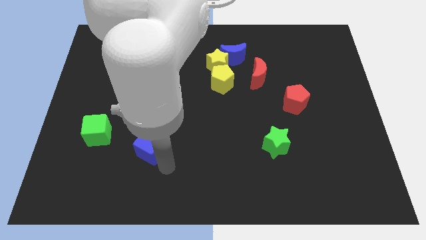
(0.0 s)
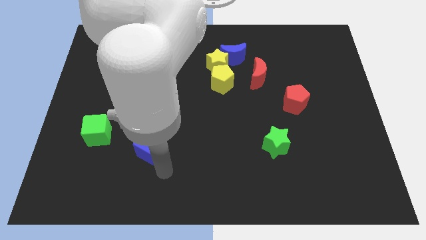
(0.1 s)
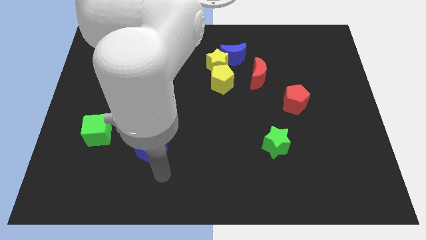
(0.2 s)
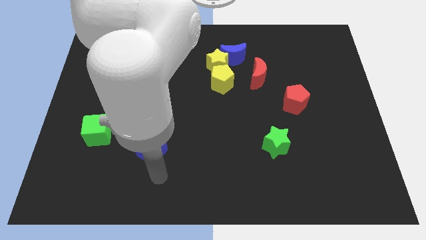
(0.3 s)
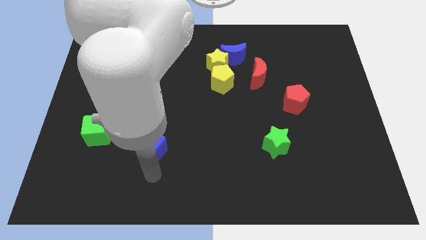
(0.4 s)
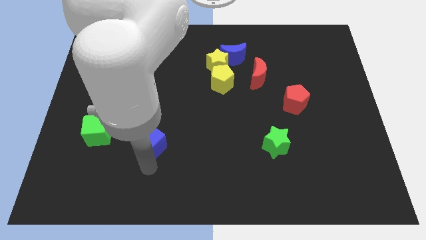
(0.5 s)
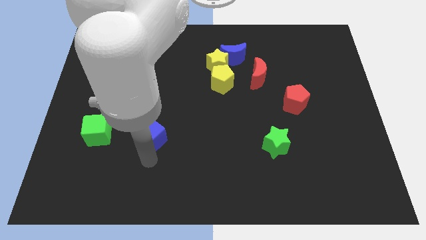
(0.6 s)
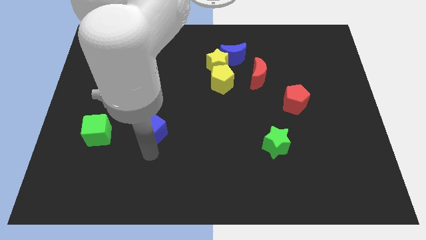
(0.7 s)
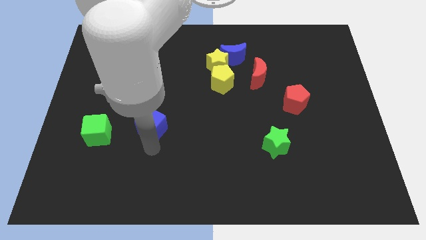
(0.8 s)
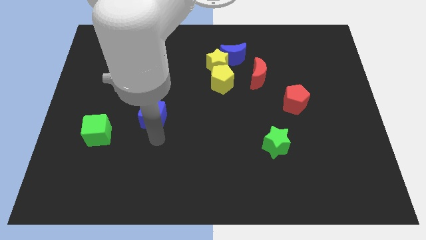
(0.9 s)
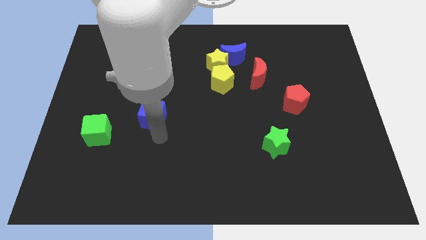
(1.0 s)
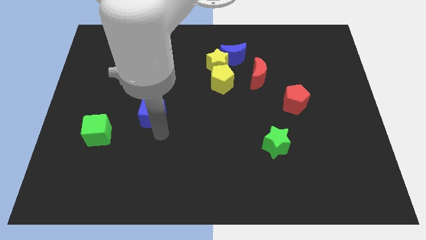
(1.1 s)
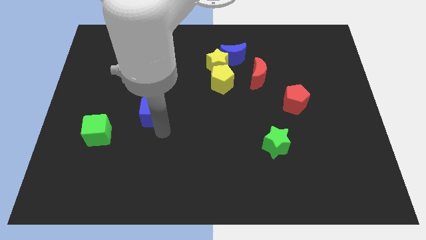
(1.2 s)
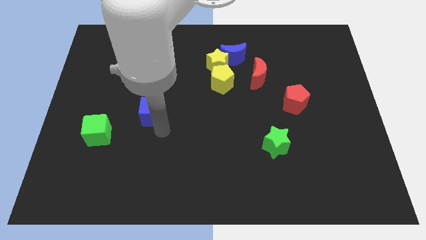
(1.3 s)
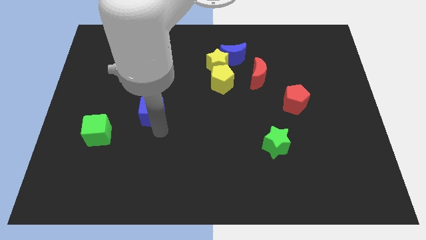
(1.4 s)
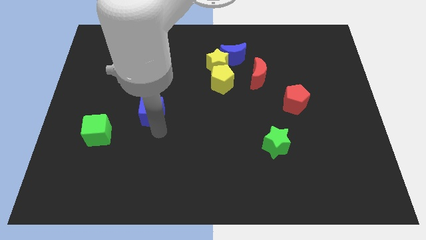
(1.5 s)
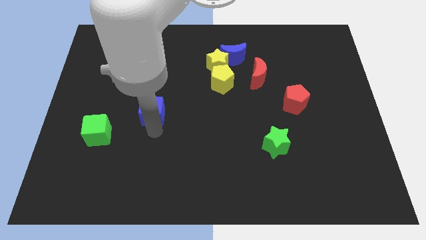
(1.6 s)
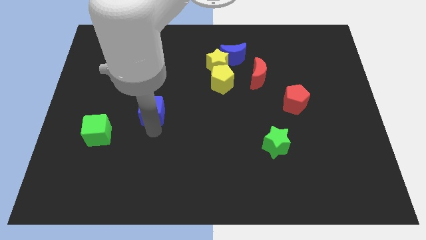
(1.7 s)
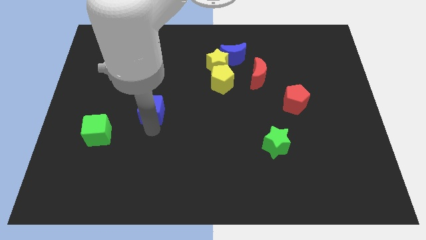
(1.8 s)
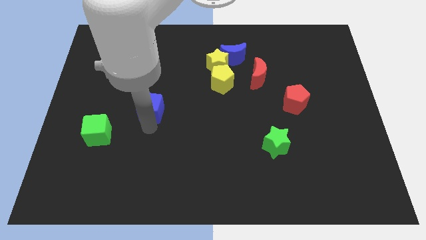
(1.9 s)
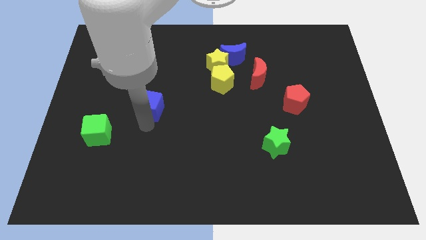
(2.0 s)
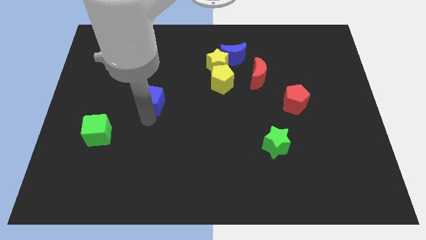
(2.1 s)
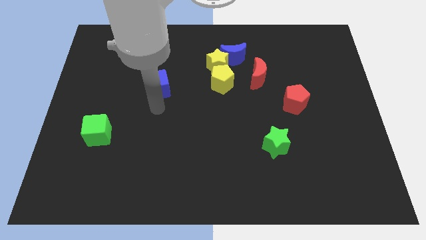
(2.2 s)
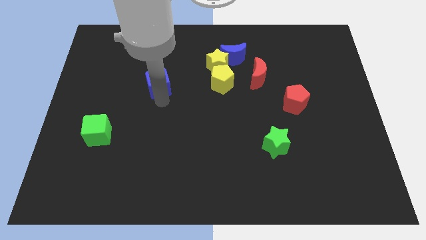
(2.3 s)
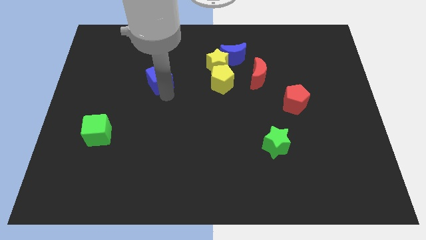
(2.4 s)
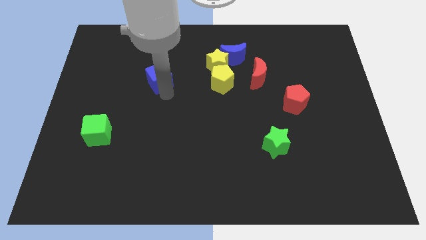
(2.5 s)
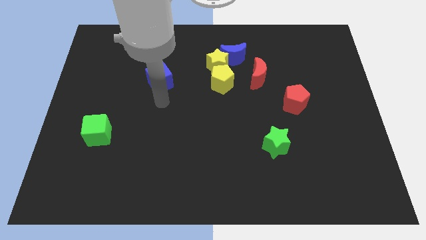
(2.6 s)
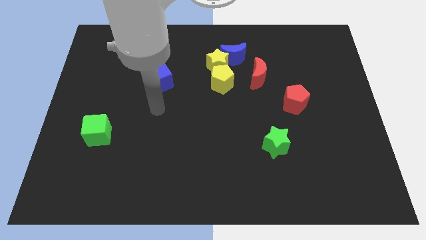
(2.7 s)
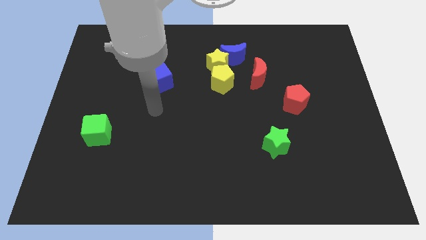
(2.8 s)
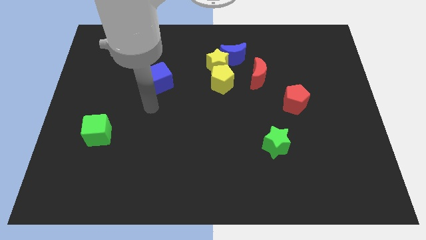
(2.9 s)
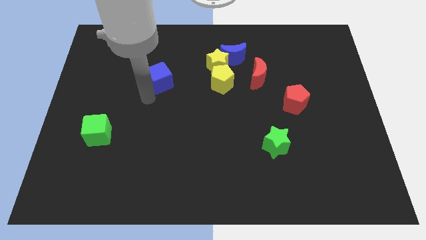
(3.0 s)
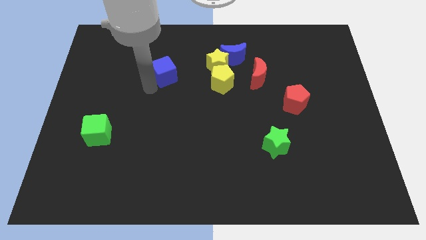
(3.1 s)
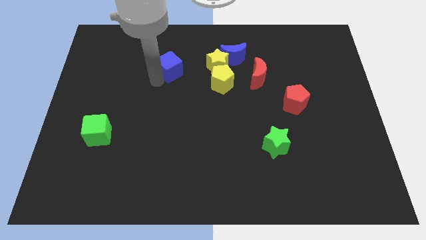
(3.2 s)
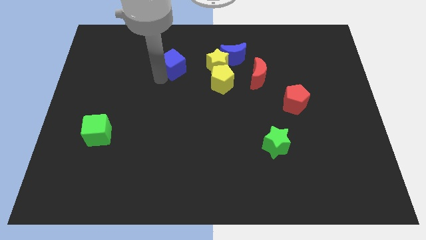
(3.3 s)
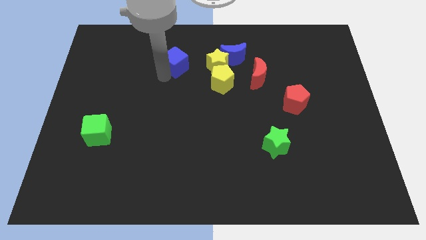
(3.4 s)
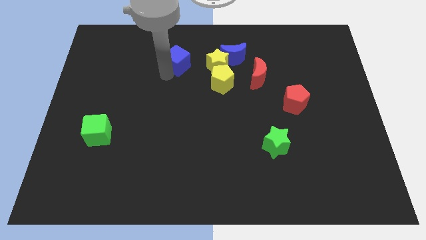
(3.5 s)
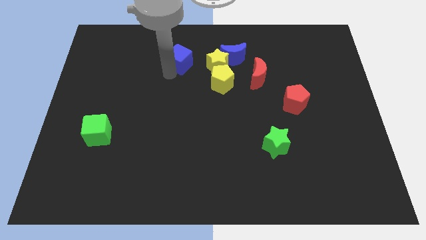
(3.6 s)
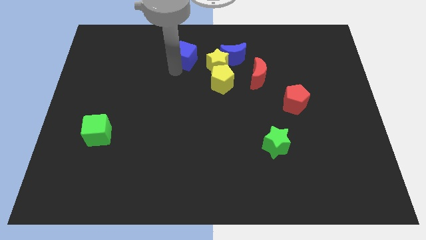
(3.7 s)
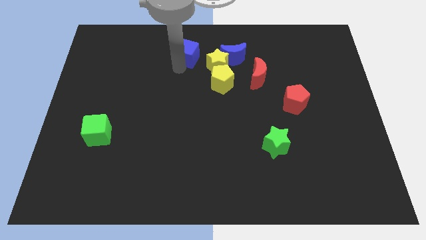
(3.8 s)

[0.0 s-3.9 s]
push the blue cube to the top center

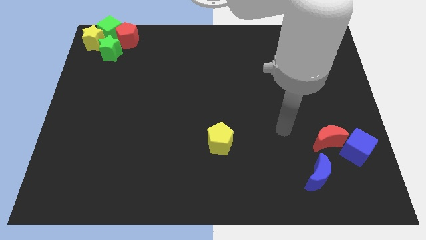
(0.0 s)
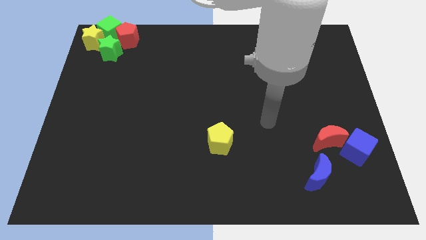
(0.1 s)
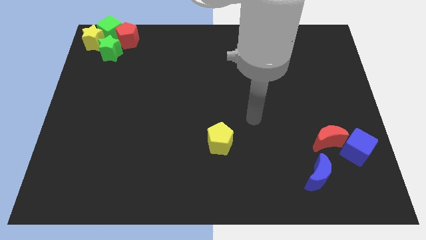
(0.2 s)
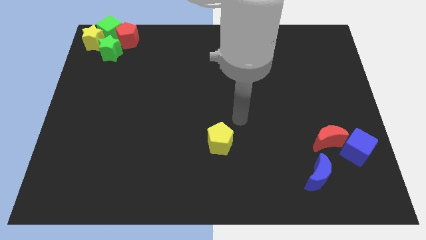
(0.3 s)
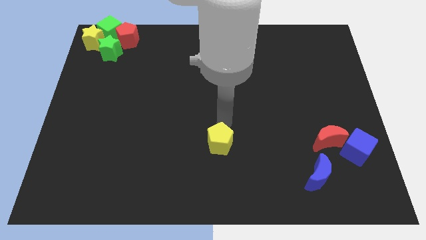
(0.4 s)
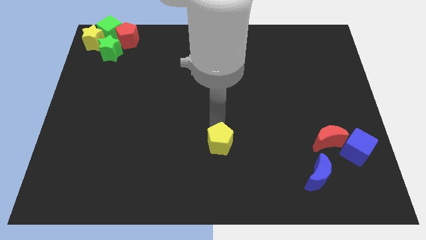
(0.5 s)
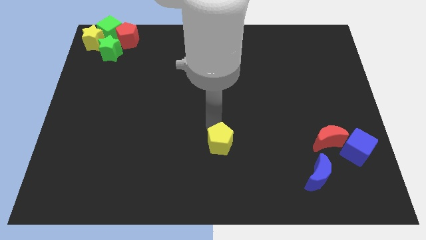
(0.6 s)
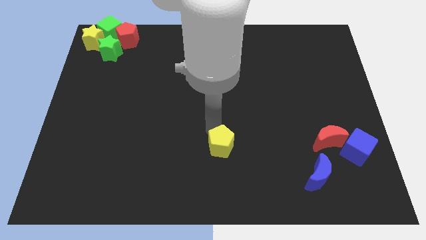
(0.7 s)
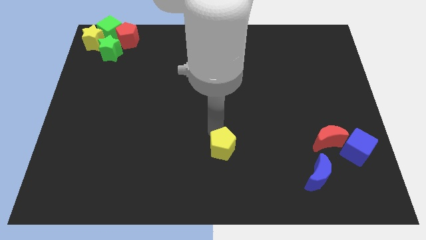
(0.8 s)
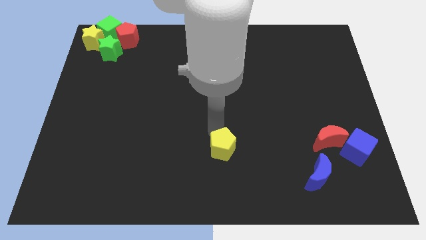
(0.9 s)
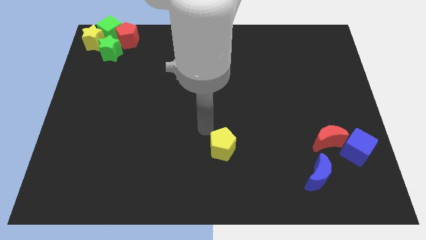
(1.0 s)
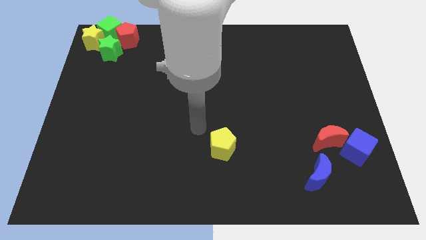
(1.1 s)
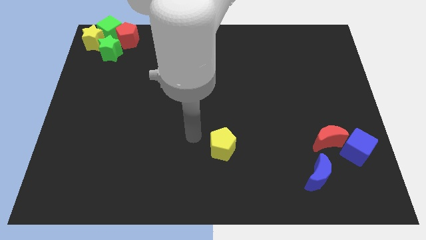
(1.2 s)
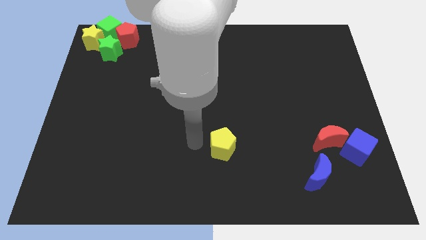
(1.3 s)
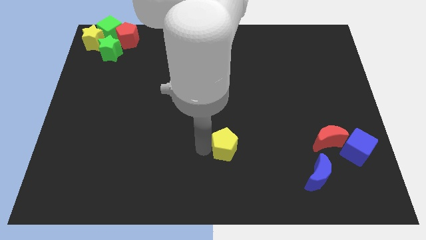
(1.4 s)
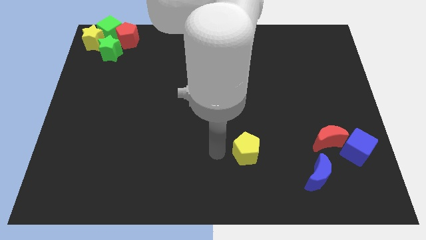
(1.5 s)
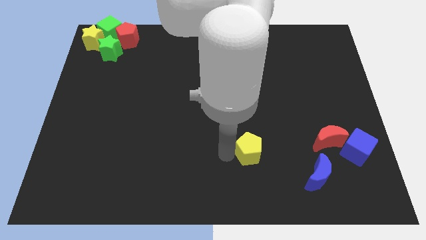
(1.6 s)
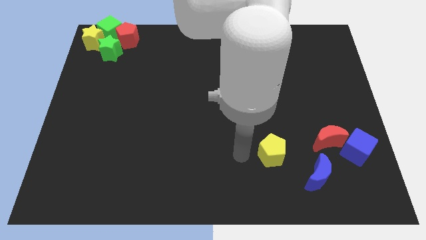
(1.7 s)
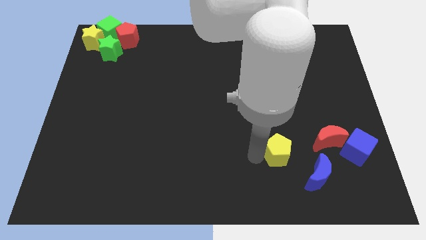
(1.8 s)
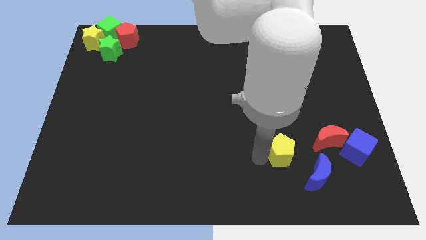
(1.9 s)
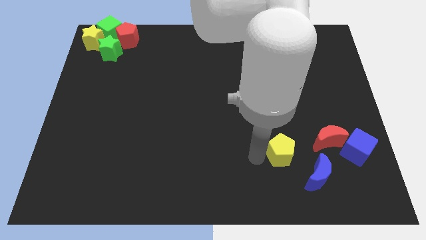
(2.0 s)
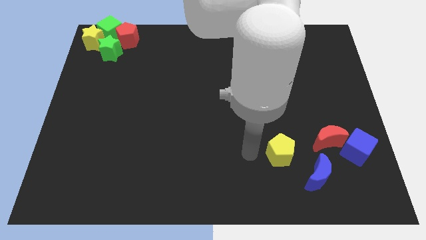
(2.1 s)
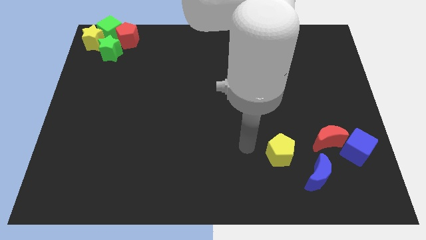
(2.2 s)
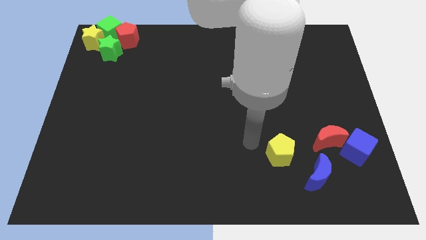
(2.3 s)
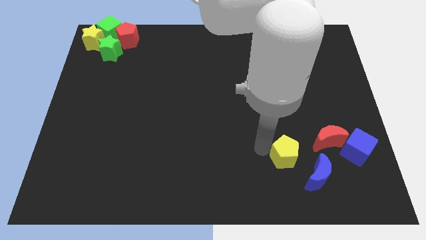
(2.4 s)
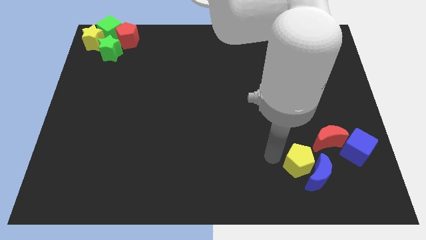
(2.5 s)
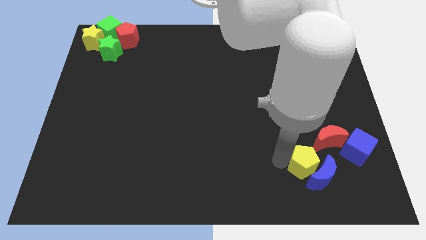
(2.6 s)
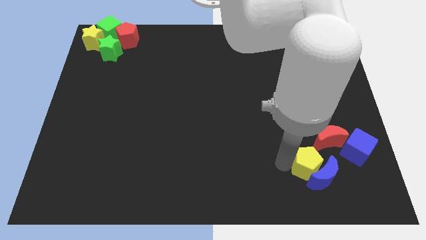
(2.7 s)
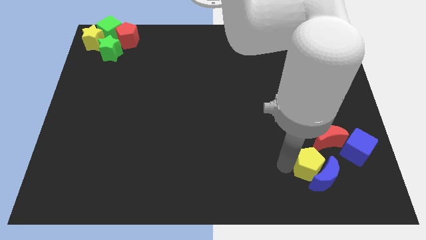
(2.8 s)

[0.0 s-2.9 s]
drag the yellow pentagon into the blue moon

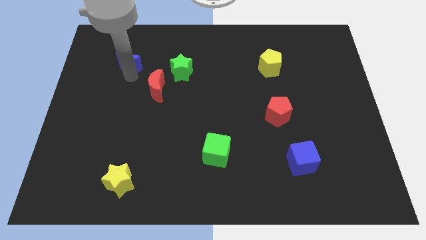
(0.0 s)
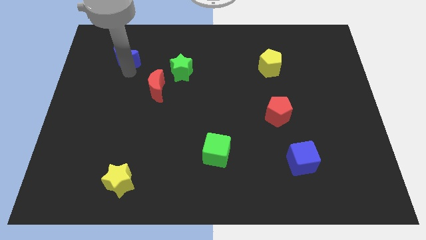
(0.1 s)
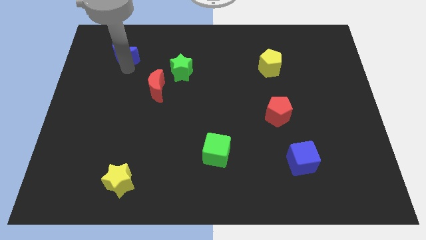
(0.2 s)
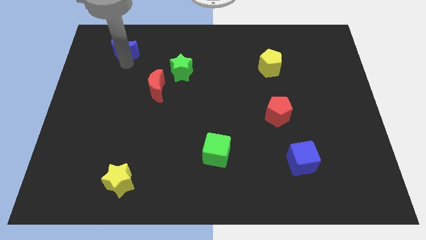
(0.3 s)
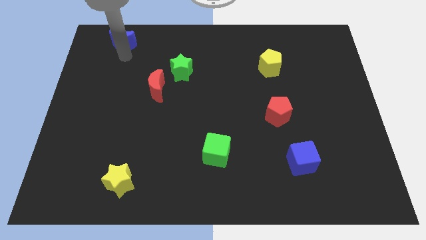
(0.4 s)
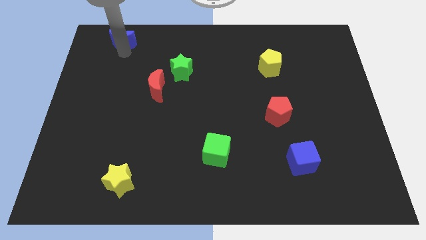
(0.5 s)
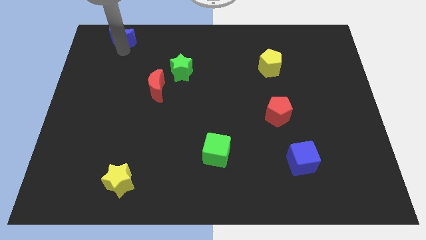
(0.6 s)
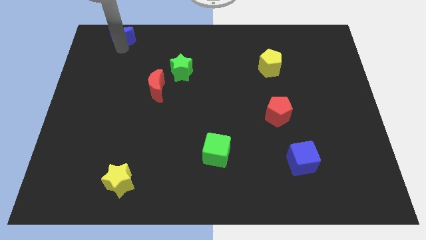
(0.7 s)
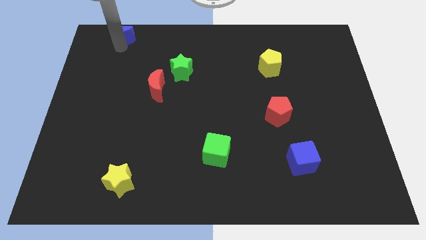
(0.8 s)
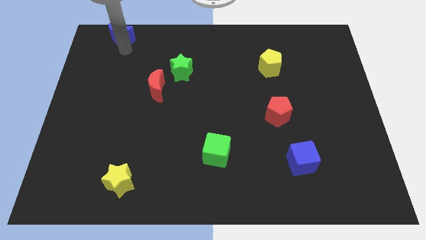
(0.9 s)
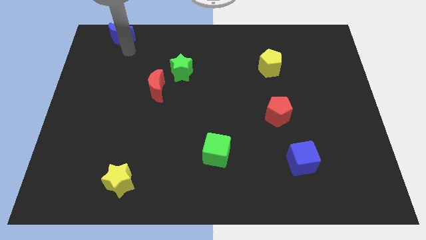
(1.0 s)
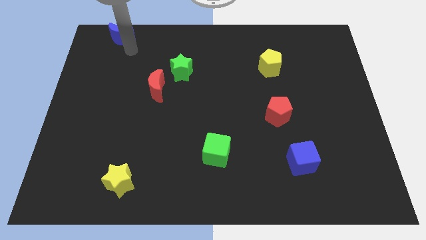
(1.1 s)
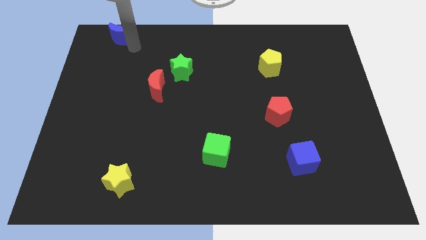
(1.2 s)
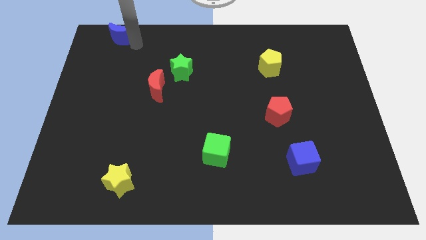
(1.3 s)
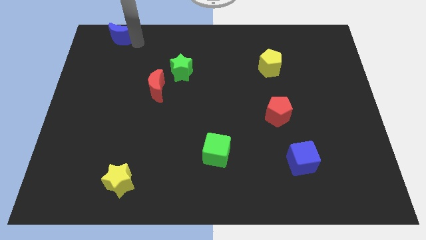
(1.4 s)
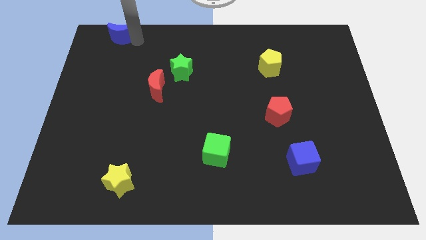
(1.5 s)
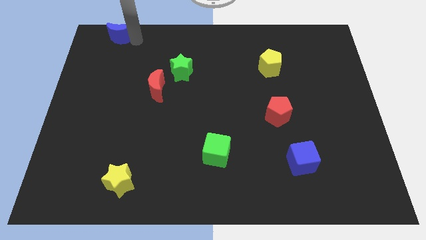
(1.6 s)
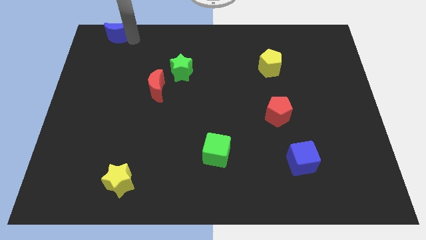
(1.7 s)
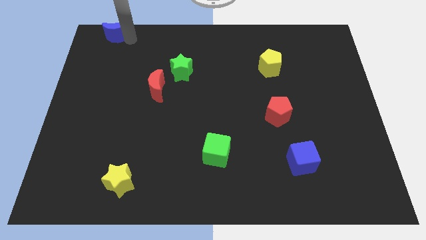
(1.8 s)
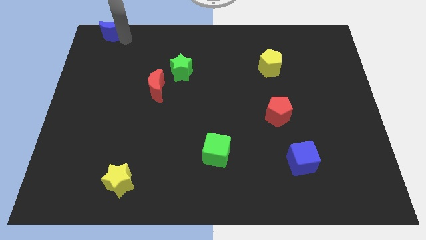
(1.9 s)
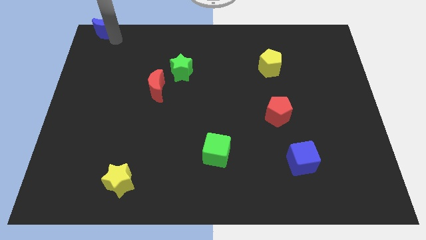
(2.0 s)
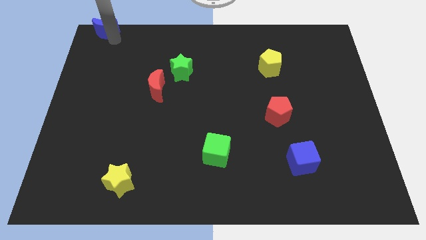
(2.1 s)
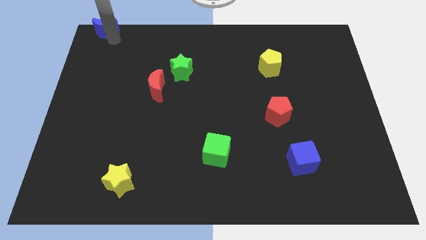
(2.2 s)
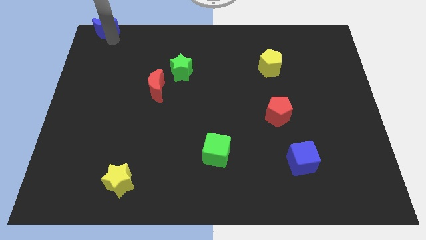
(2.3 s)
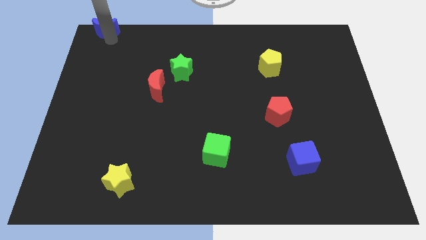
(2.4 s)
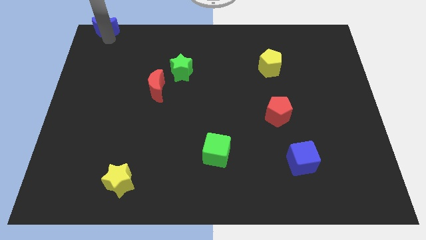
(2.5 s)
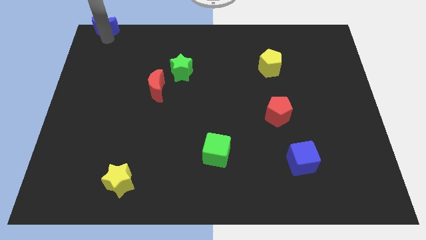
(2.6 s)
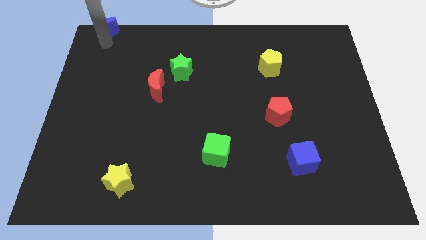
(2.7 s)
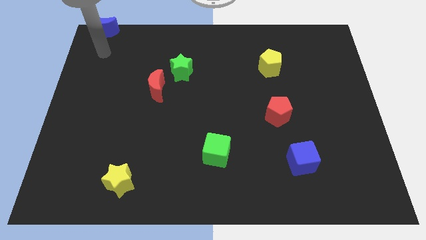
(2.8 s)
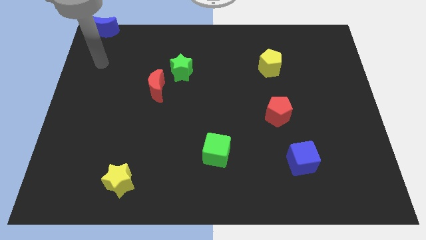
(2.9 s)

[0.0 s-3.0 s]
move the blue crescent to the top left of the board
